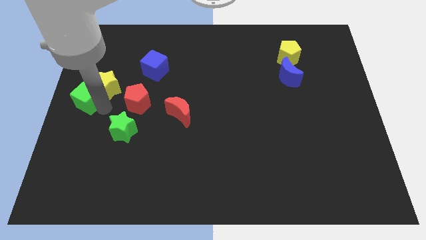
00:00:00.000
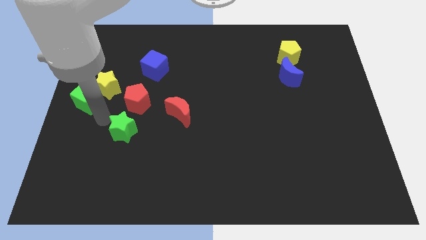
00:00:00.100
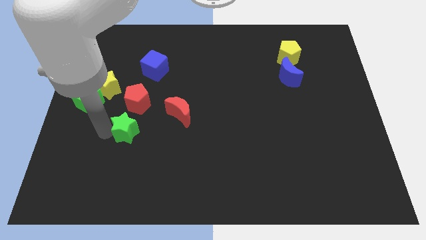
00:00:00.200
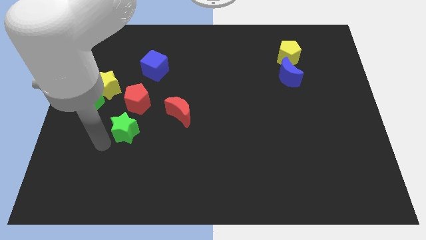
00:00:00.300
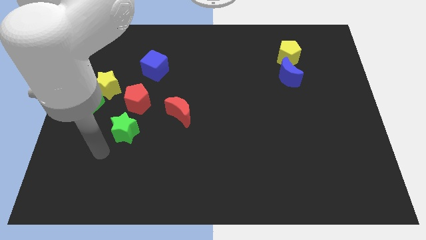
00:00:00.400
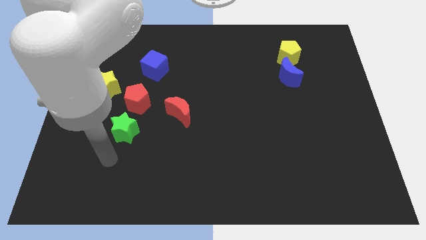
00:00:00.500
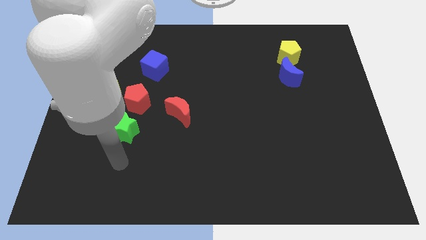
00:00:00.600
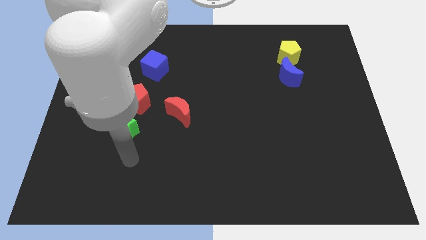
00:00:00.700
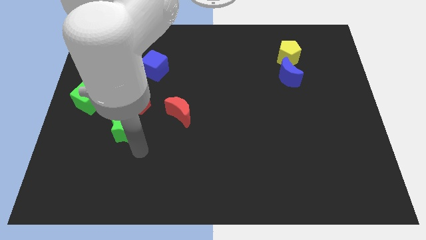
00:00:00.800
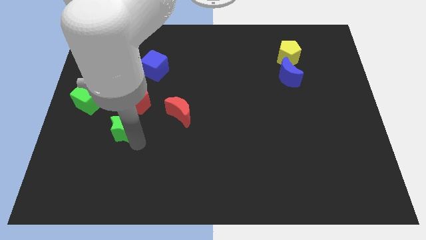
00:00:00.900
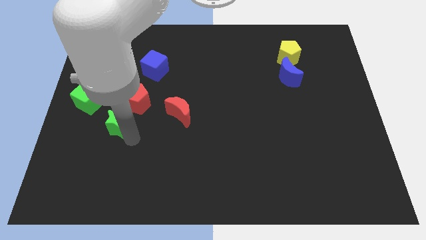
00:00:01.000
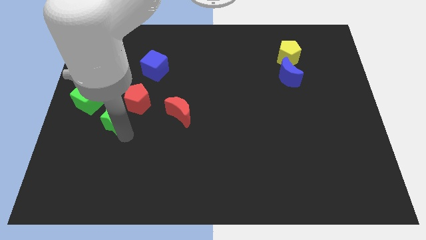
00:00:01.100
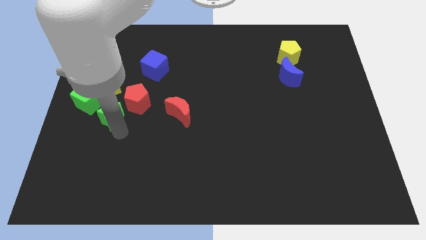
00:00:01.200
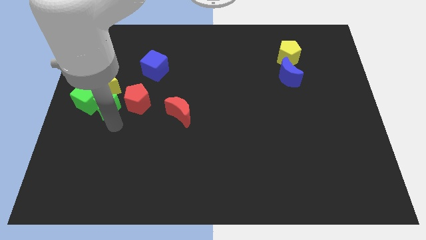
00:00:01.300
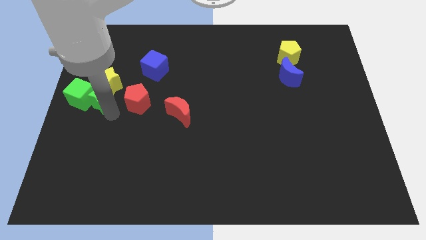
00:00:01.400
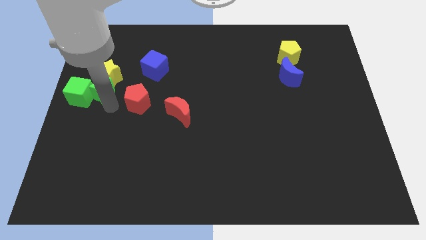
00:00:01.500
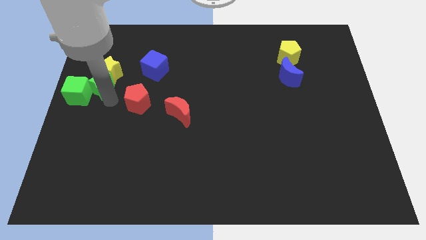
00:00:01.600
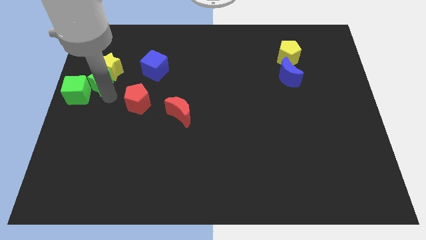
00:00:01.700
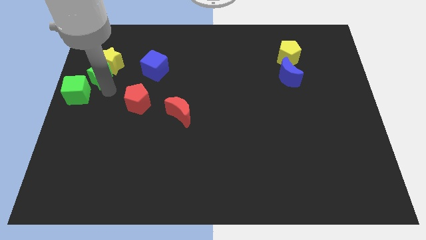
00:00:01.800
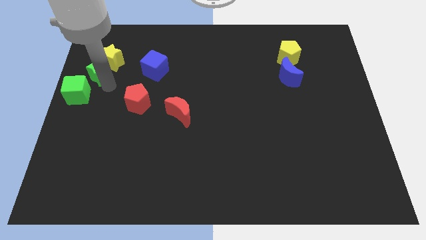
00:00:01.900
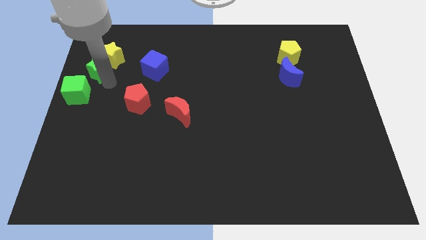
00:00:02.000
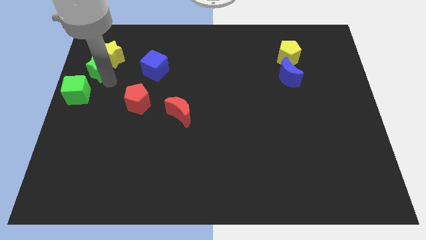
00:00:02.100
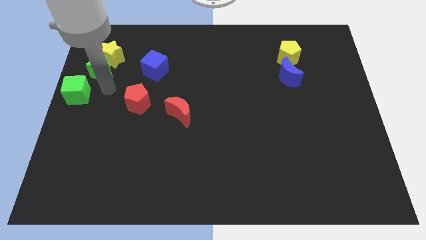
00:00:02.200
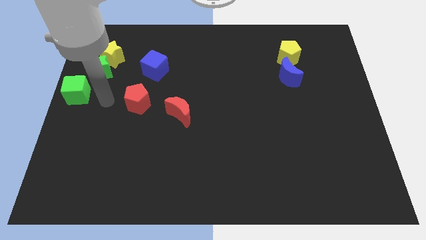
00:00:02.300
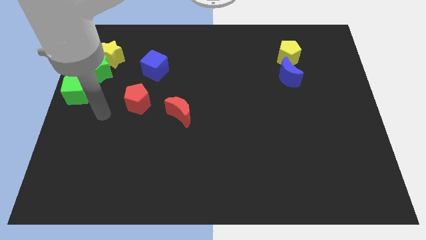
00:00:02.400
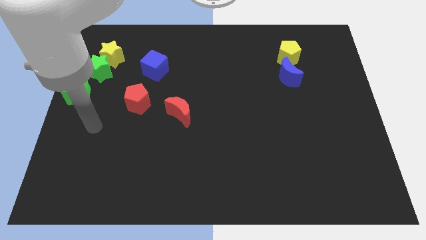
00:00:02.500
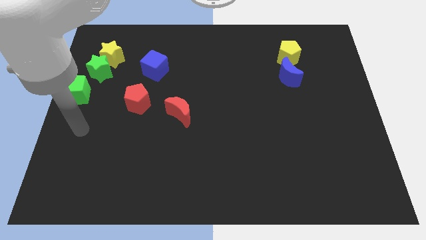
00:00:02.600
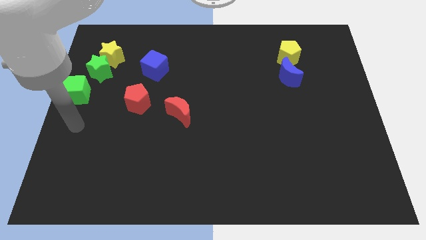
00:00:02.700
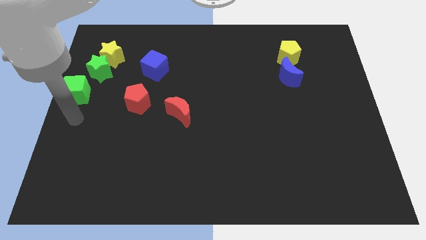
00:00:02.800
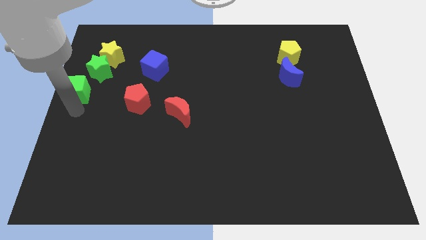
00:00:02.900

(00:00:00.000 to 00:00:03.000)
push the green star into the yellow star

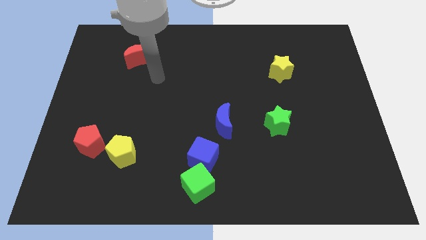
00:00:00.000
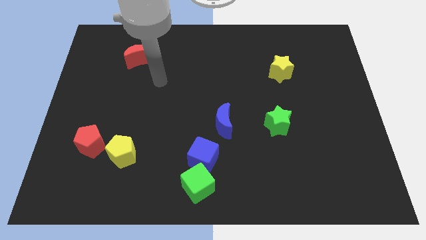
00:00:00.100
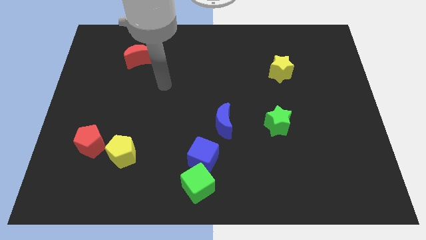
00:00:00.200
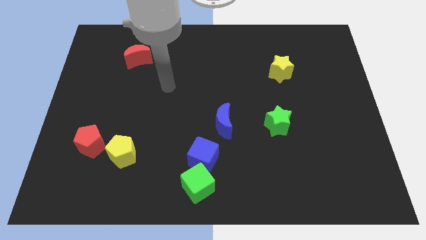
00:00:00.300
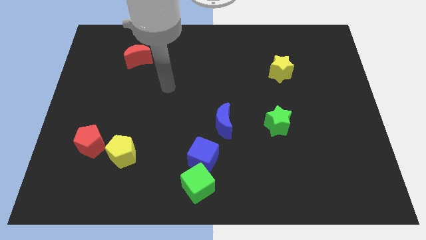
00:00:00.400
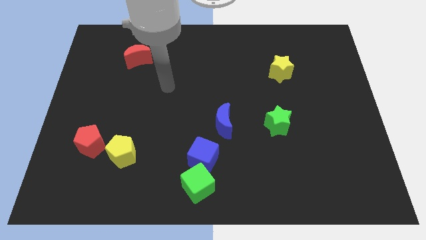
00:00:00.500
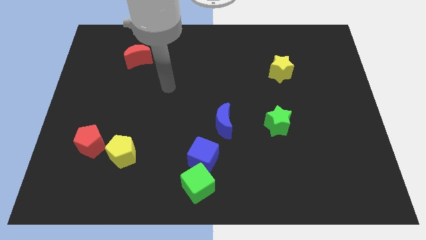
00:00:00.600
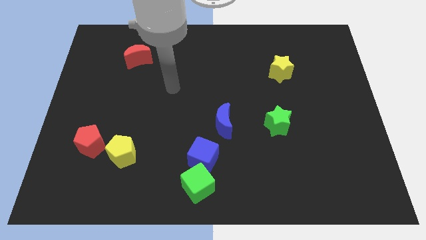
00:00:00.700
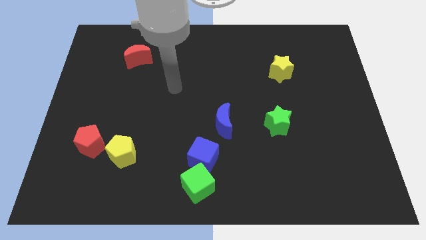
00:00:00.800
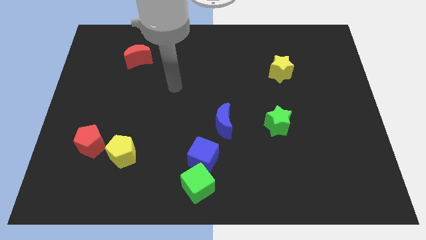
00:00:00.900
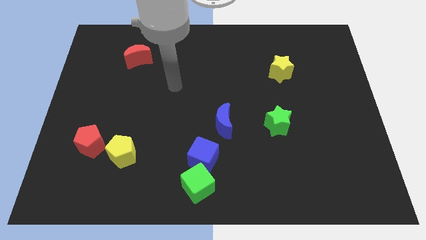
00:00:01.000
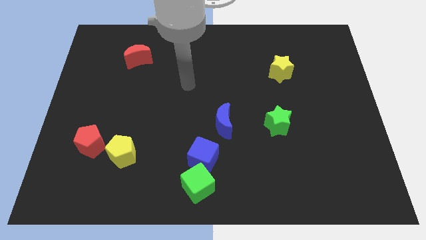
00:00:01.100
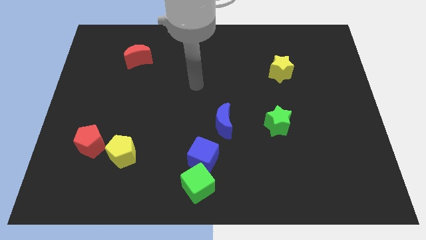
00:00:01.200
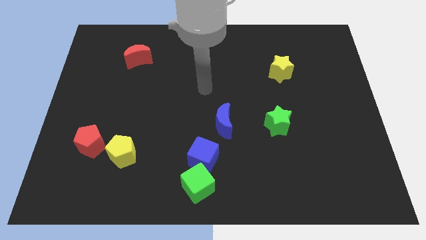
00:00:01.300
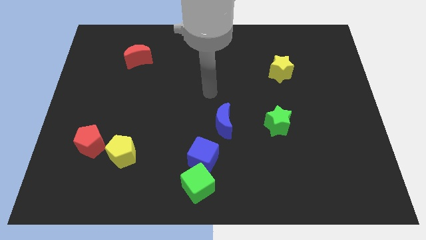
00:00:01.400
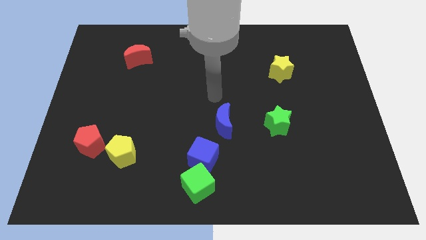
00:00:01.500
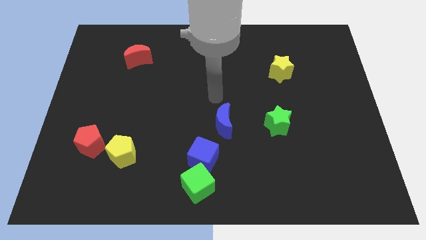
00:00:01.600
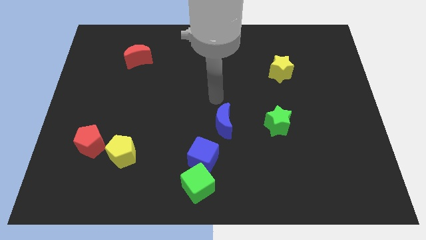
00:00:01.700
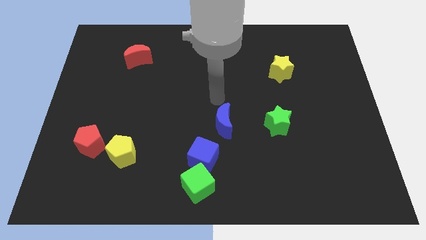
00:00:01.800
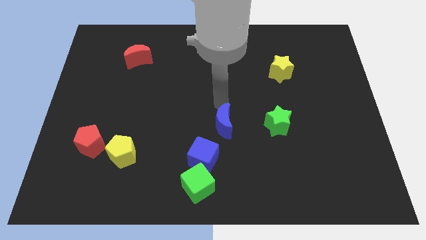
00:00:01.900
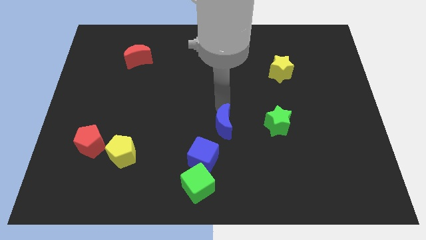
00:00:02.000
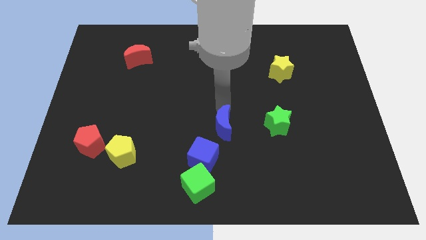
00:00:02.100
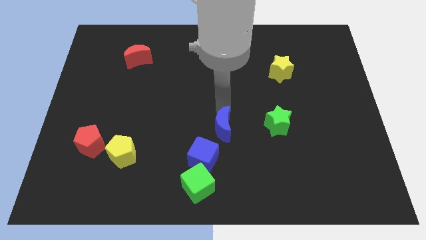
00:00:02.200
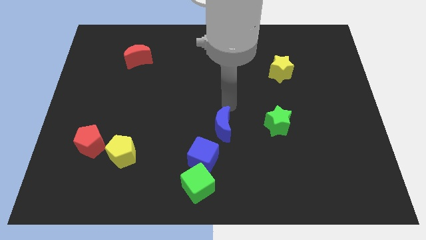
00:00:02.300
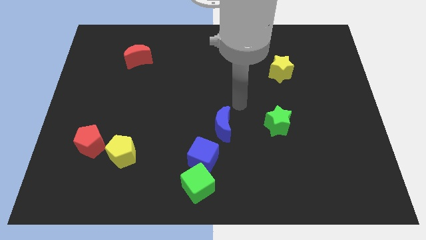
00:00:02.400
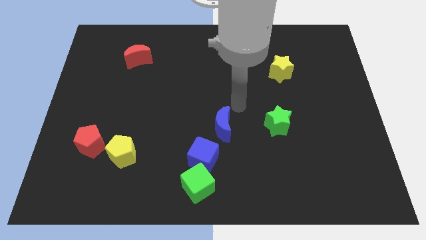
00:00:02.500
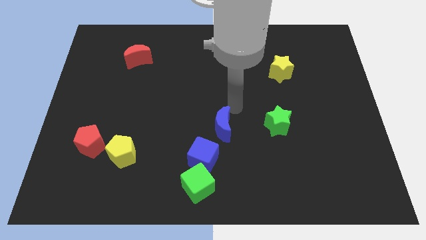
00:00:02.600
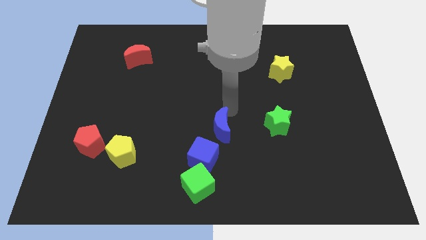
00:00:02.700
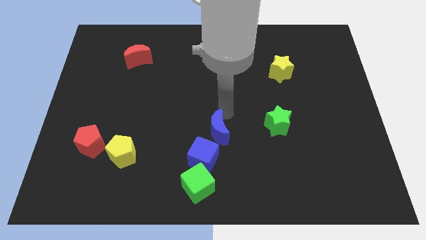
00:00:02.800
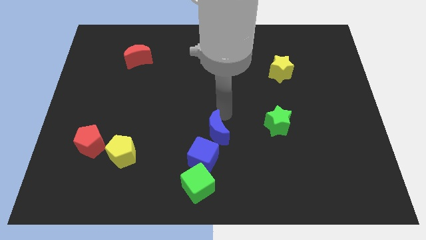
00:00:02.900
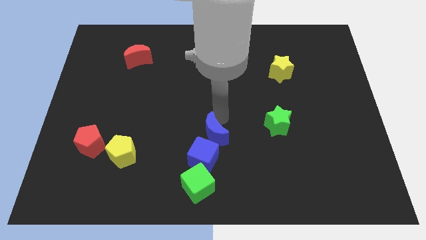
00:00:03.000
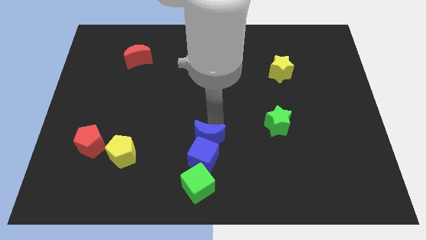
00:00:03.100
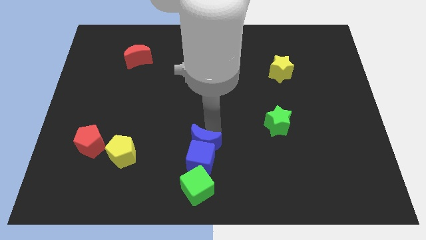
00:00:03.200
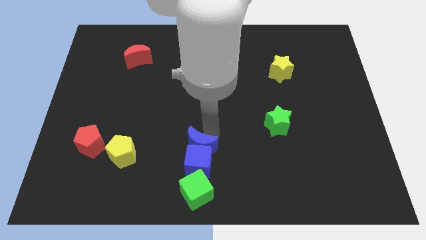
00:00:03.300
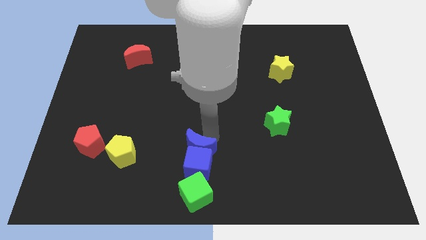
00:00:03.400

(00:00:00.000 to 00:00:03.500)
move the blue crescent into the blue cube

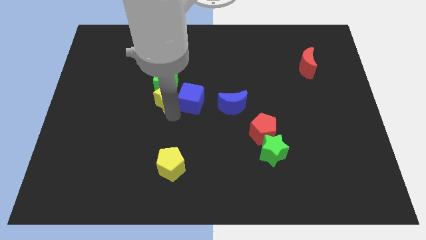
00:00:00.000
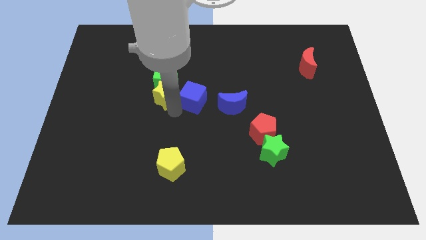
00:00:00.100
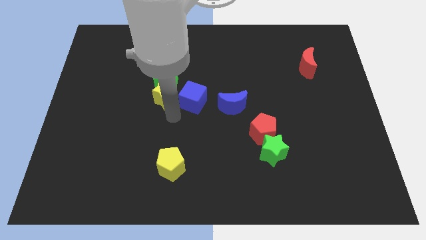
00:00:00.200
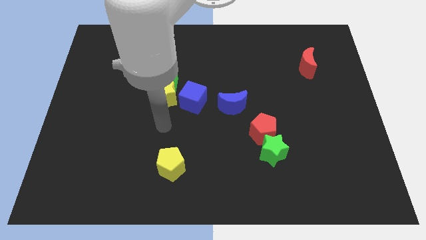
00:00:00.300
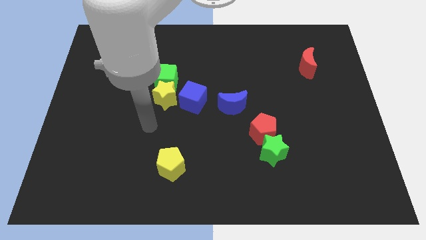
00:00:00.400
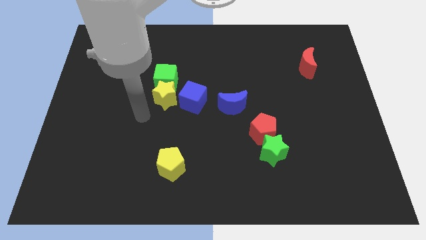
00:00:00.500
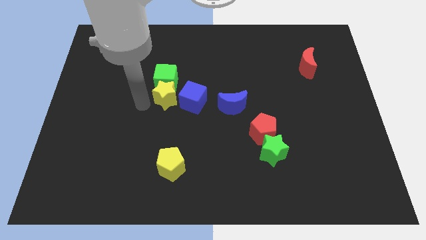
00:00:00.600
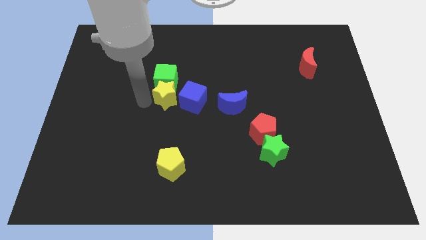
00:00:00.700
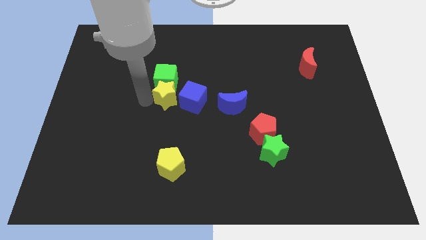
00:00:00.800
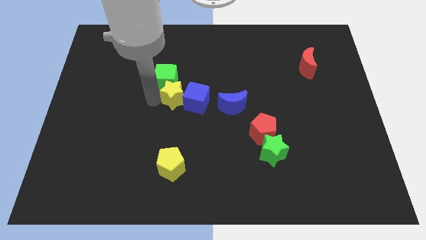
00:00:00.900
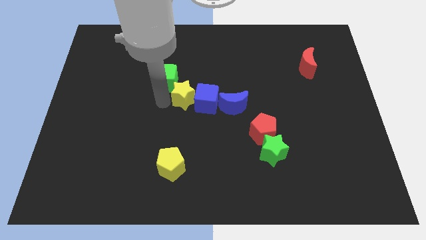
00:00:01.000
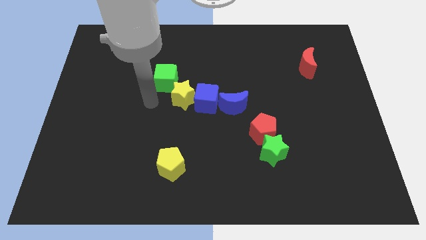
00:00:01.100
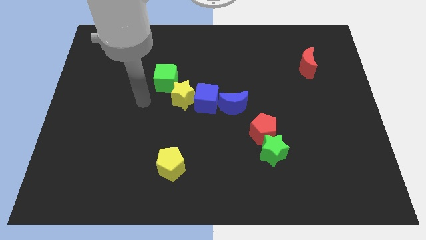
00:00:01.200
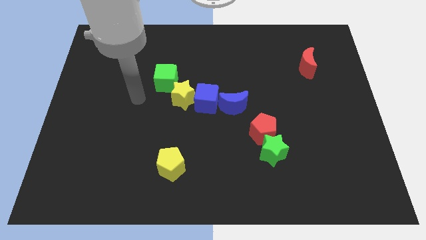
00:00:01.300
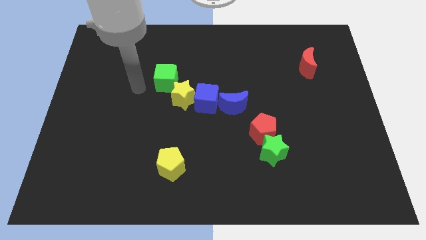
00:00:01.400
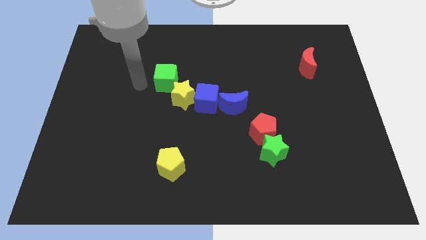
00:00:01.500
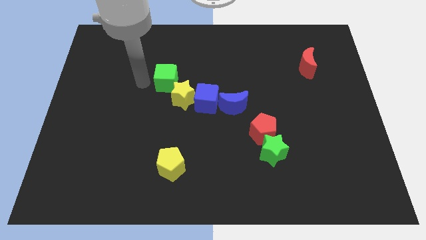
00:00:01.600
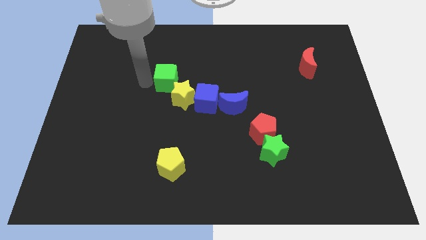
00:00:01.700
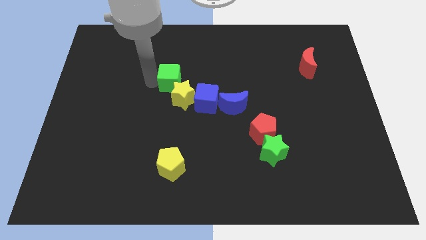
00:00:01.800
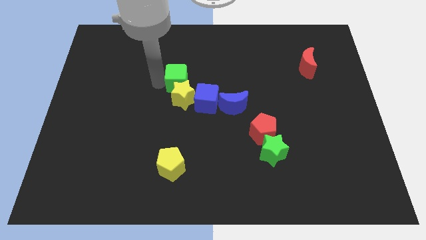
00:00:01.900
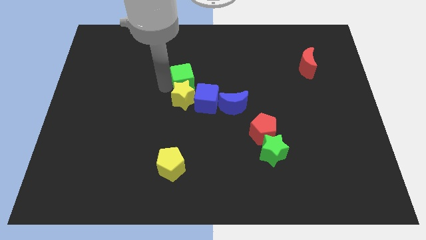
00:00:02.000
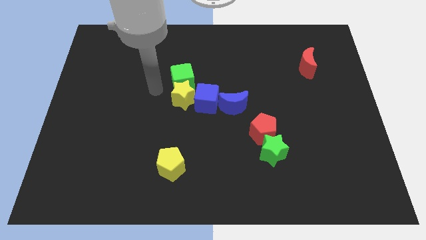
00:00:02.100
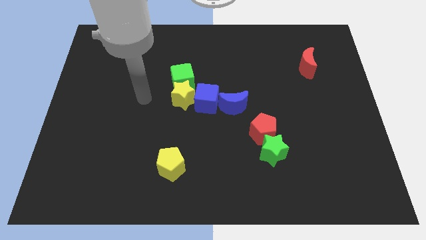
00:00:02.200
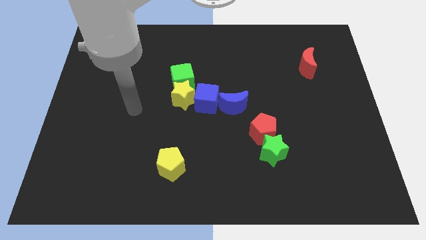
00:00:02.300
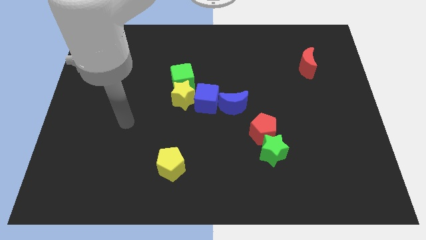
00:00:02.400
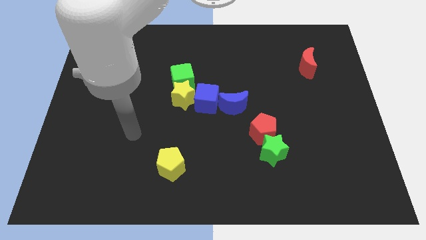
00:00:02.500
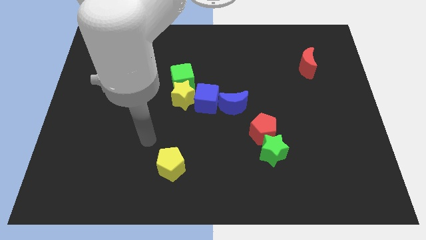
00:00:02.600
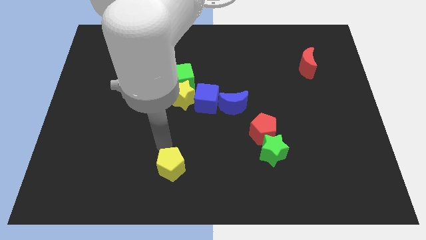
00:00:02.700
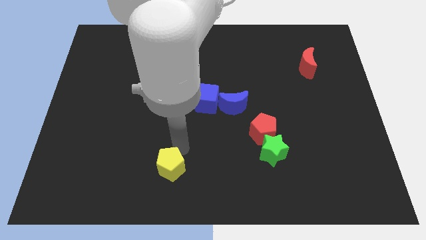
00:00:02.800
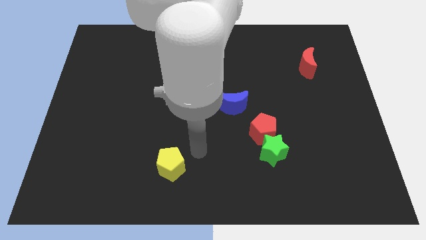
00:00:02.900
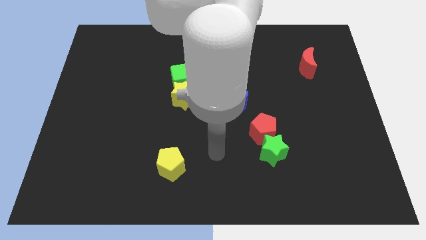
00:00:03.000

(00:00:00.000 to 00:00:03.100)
place the green cube and yellow star into blue cube
